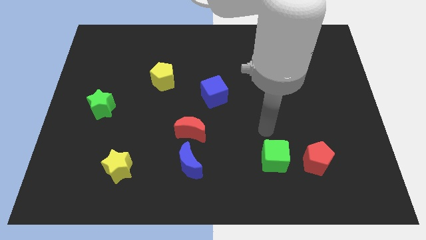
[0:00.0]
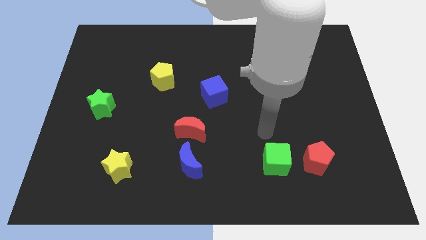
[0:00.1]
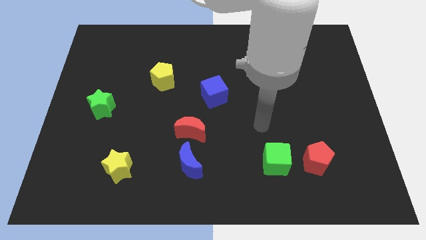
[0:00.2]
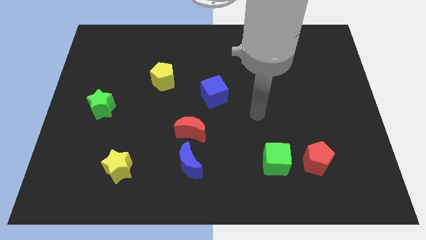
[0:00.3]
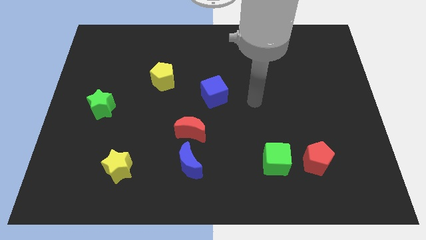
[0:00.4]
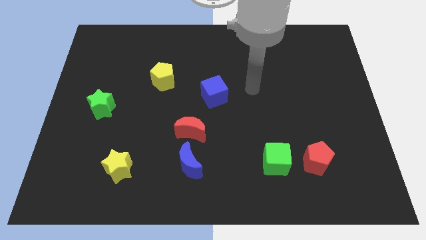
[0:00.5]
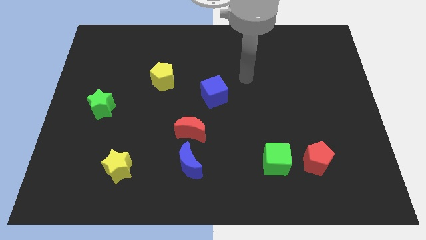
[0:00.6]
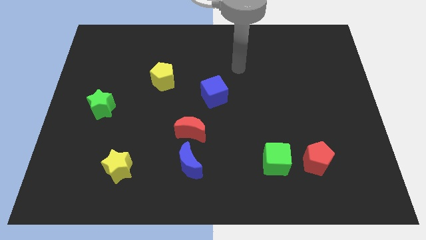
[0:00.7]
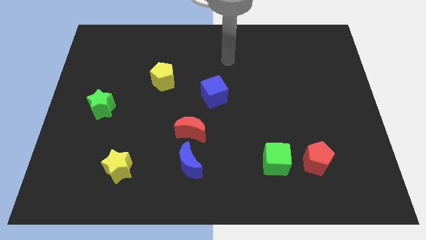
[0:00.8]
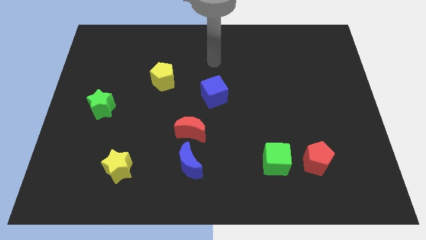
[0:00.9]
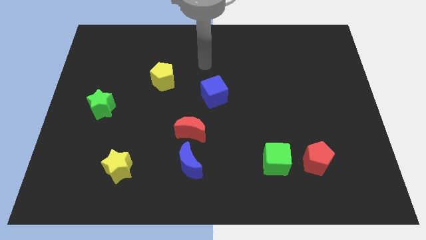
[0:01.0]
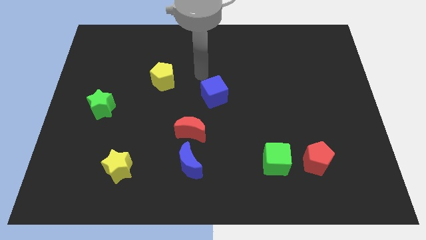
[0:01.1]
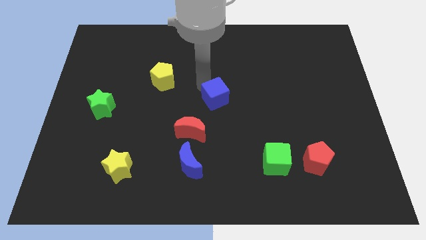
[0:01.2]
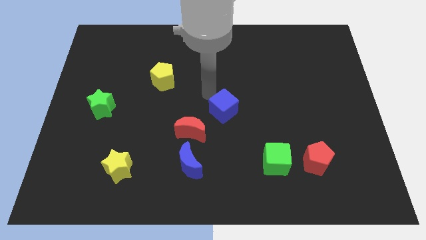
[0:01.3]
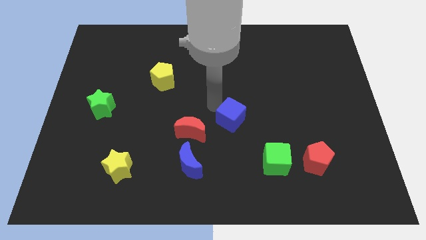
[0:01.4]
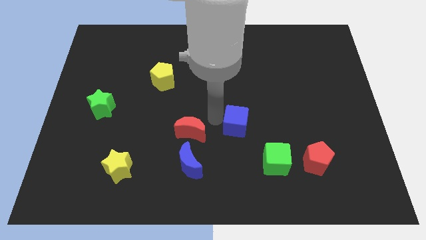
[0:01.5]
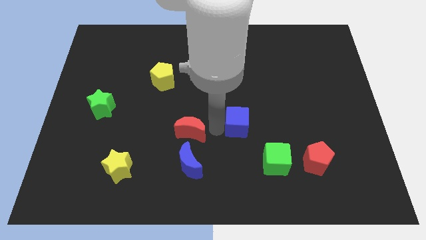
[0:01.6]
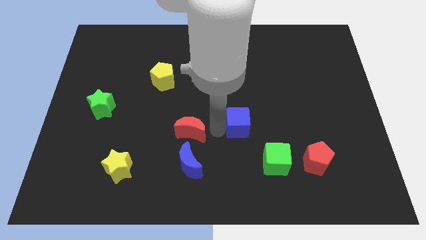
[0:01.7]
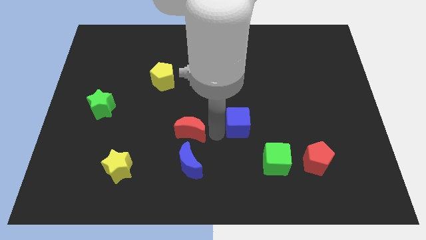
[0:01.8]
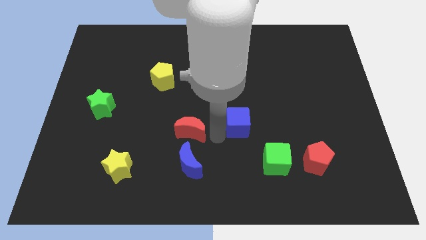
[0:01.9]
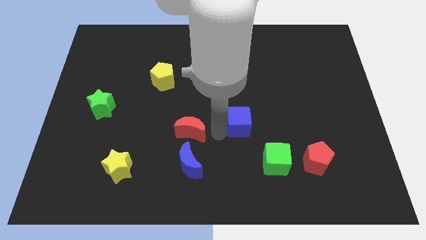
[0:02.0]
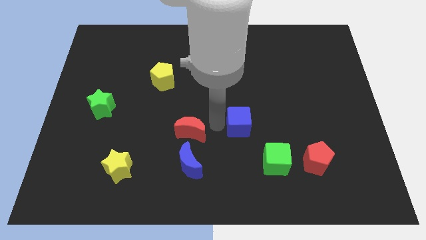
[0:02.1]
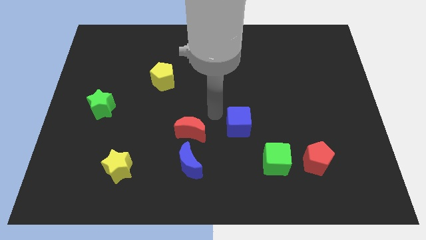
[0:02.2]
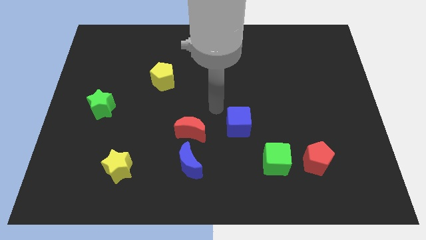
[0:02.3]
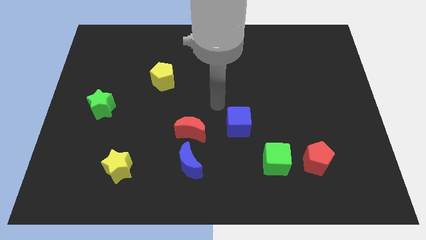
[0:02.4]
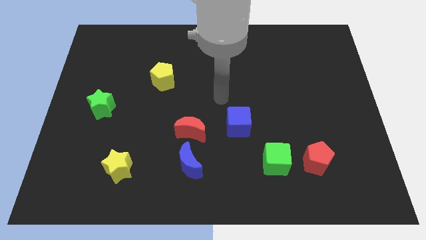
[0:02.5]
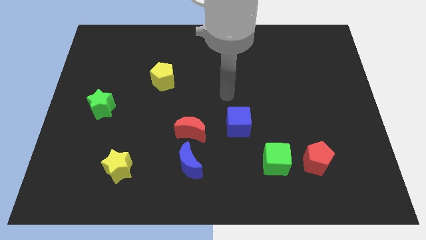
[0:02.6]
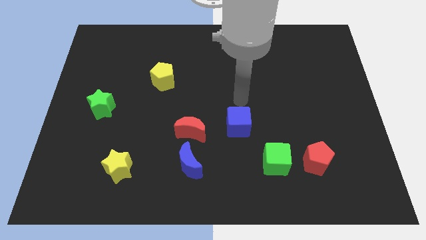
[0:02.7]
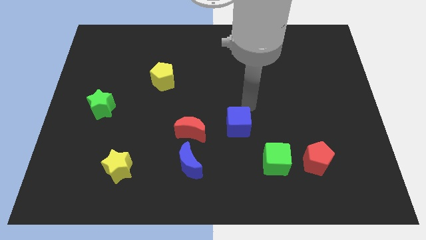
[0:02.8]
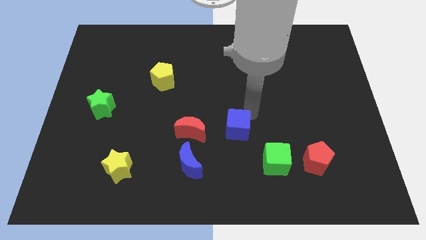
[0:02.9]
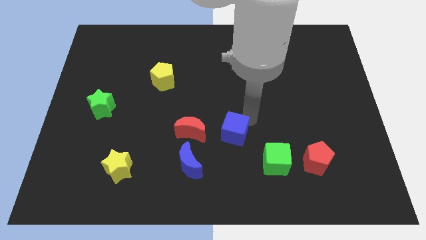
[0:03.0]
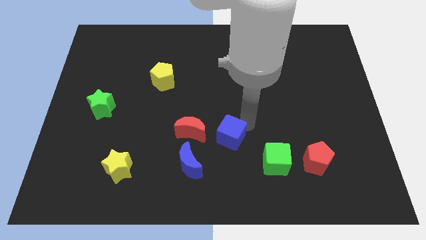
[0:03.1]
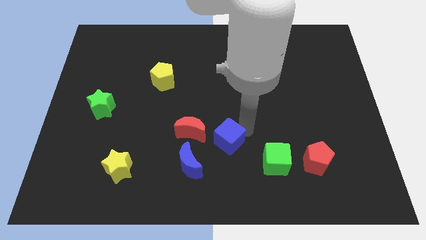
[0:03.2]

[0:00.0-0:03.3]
place blue cube adjacent to red moon

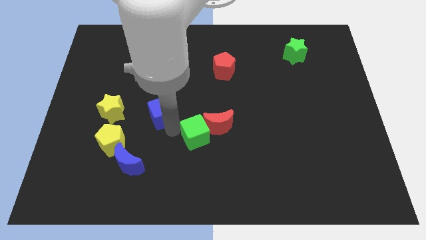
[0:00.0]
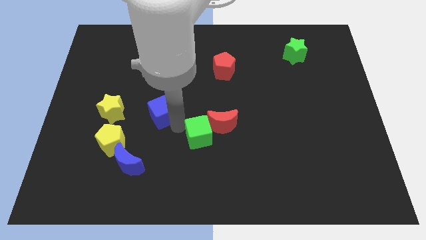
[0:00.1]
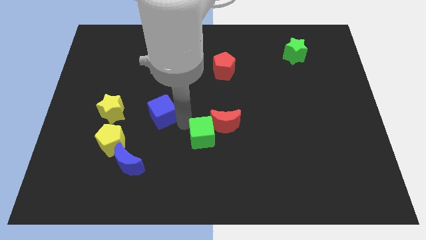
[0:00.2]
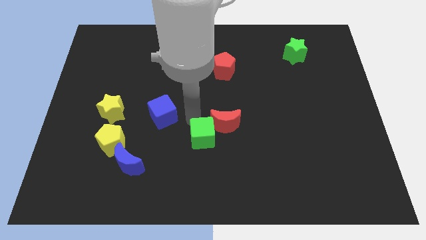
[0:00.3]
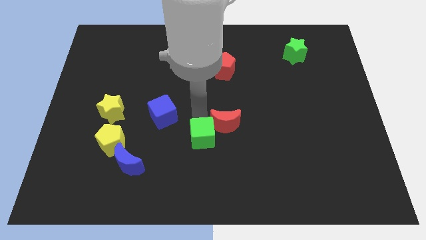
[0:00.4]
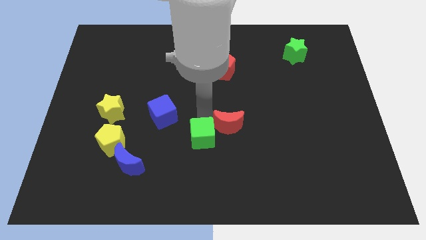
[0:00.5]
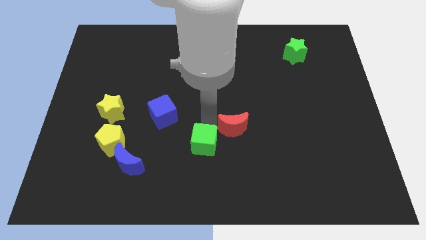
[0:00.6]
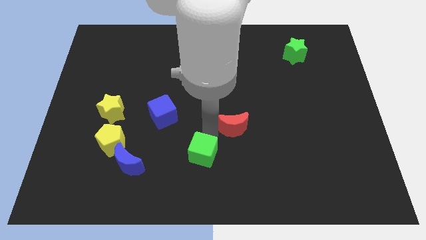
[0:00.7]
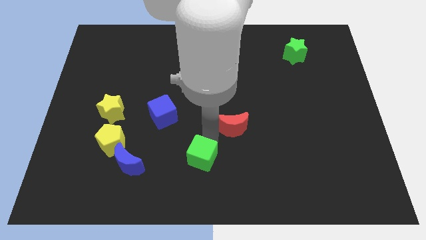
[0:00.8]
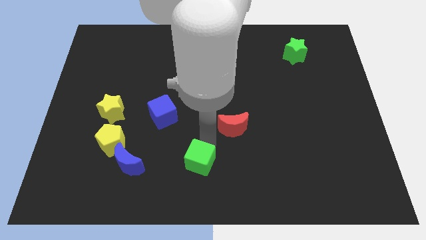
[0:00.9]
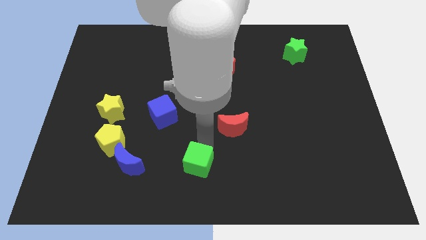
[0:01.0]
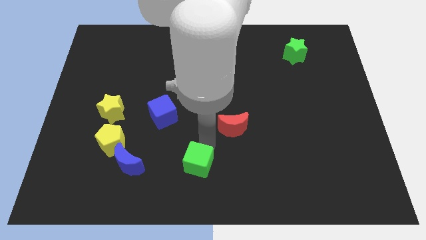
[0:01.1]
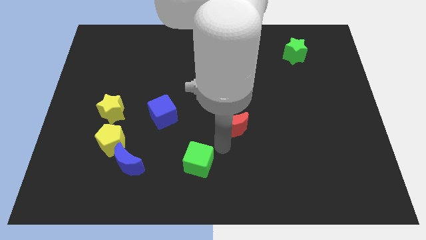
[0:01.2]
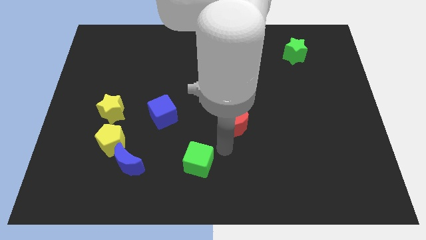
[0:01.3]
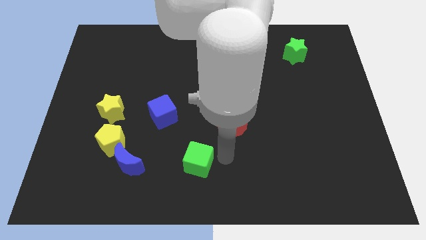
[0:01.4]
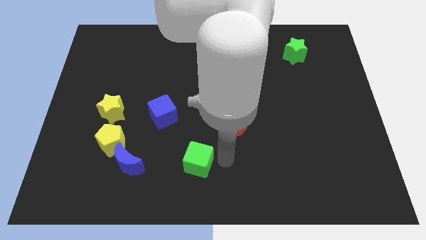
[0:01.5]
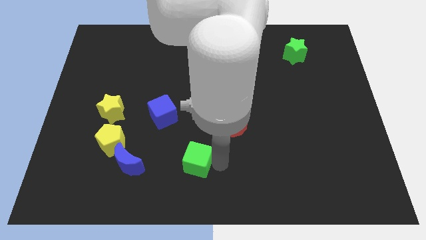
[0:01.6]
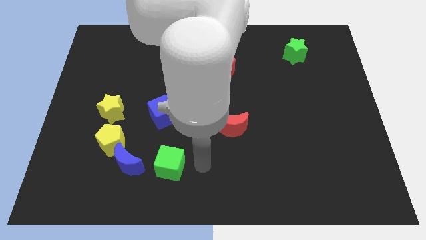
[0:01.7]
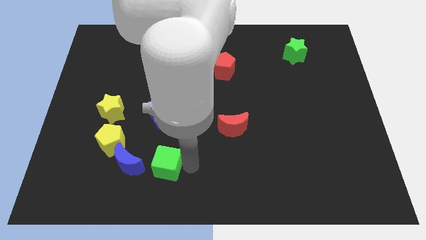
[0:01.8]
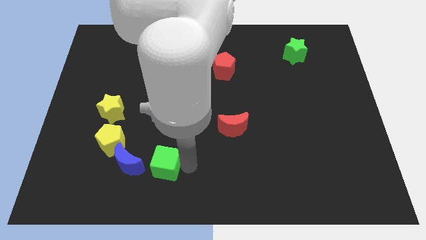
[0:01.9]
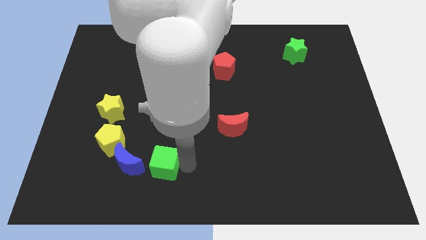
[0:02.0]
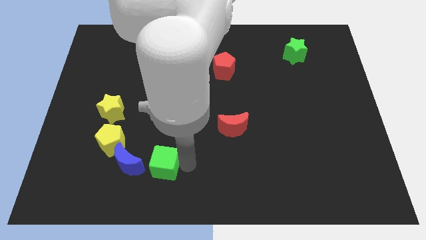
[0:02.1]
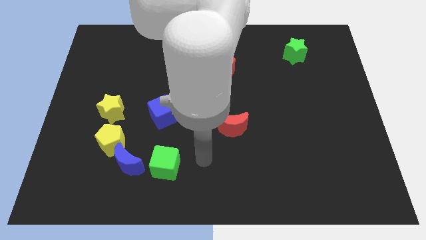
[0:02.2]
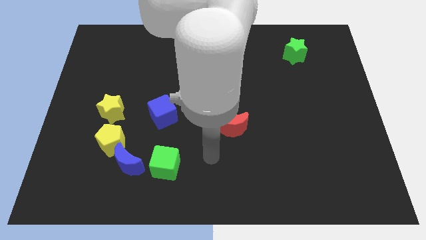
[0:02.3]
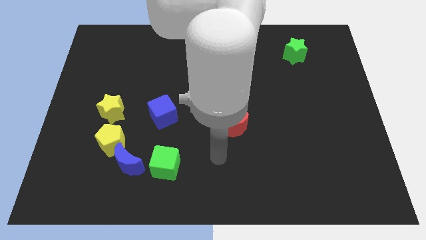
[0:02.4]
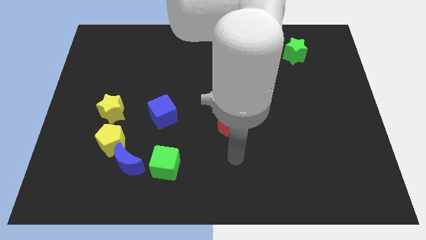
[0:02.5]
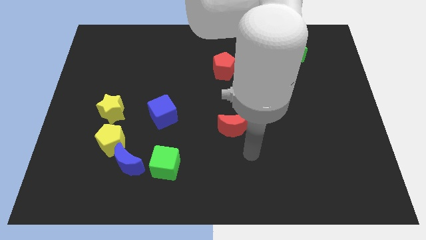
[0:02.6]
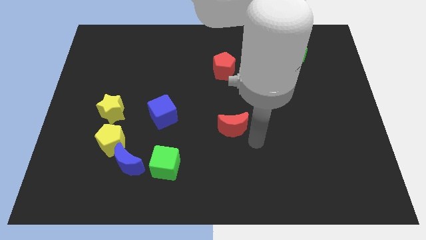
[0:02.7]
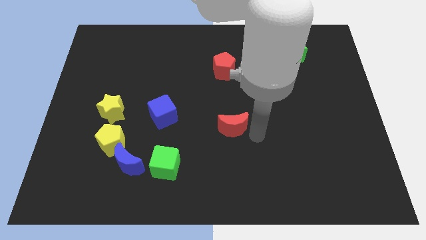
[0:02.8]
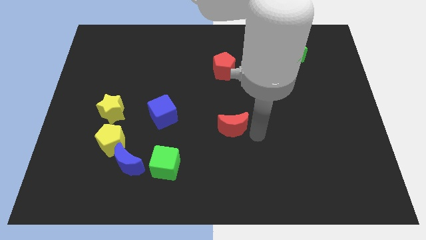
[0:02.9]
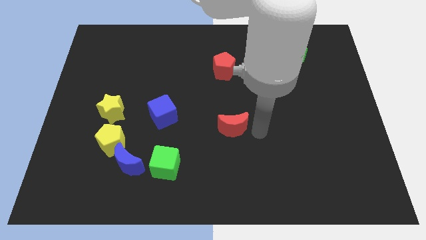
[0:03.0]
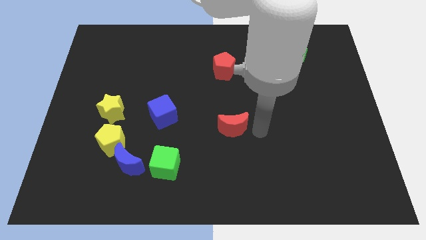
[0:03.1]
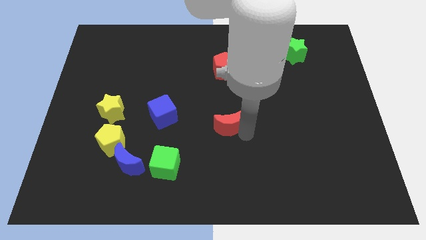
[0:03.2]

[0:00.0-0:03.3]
move the green square right to the blue moon touch red moon

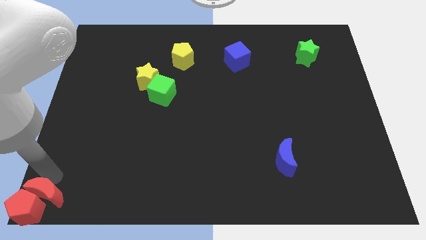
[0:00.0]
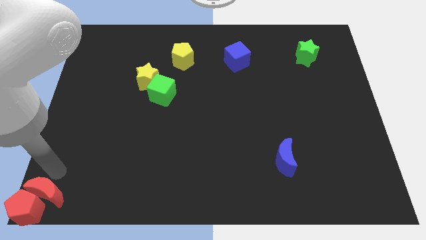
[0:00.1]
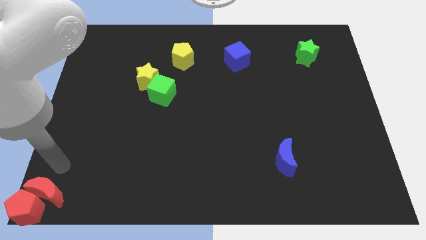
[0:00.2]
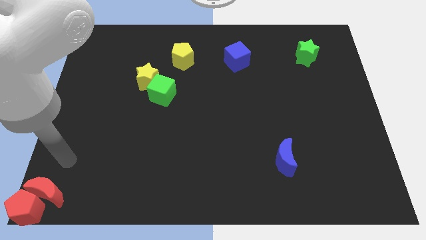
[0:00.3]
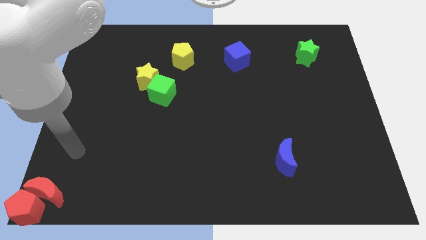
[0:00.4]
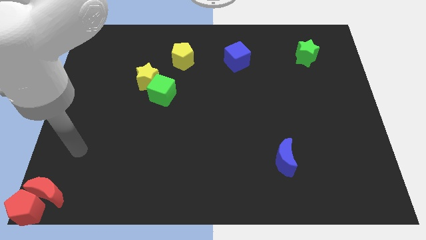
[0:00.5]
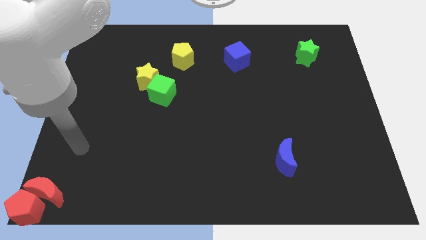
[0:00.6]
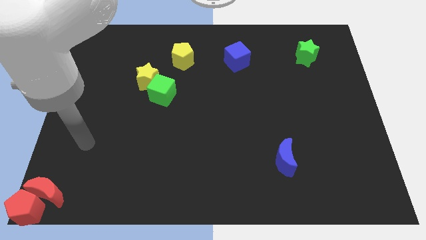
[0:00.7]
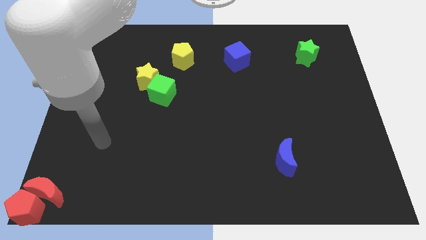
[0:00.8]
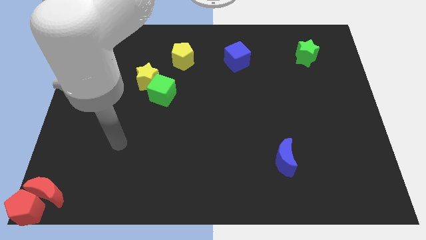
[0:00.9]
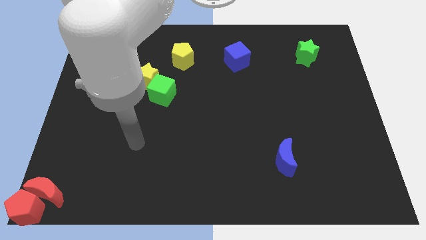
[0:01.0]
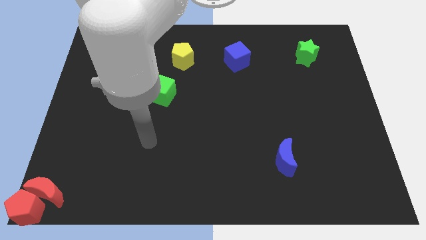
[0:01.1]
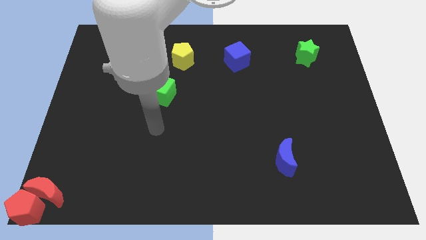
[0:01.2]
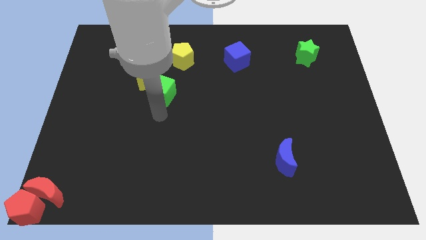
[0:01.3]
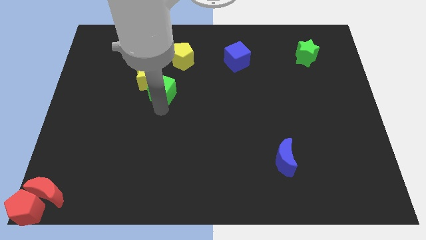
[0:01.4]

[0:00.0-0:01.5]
move your arm towards the green cube

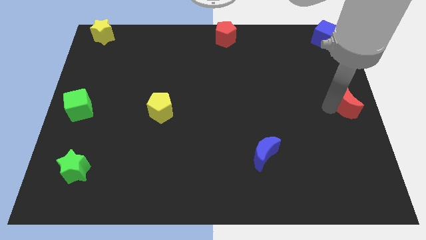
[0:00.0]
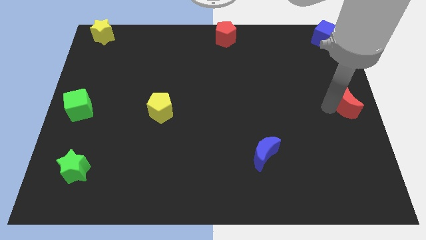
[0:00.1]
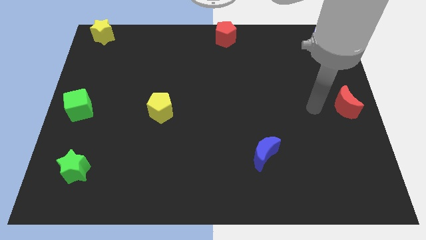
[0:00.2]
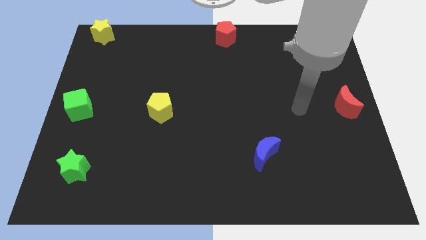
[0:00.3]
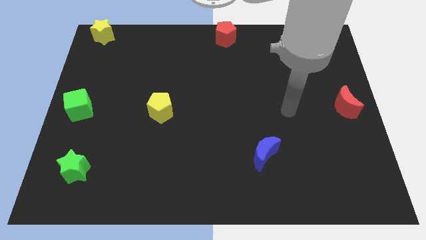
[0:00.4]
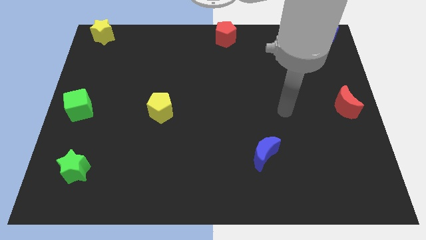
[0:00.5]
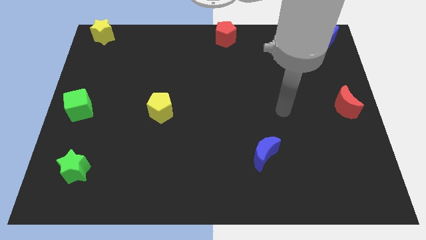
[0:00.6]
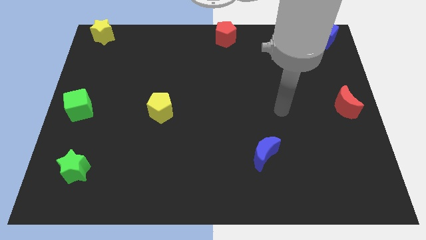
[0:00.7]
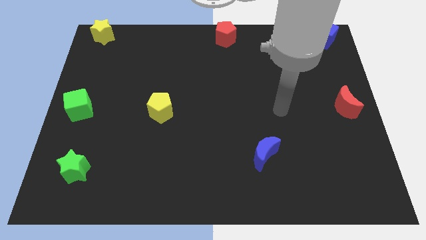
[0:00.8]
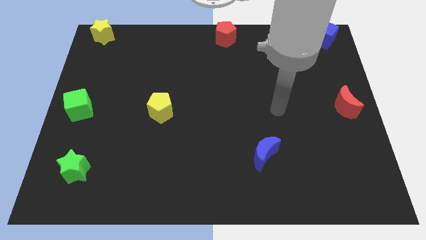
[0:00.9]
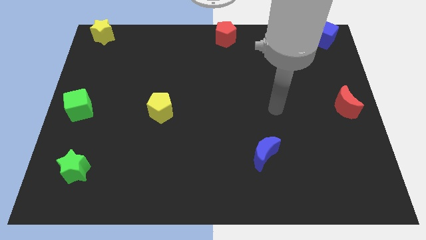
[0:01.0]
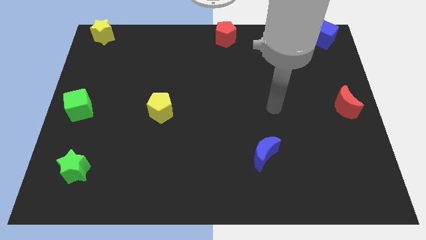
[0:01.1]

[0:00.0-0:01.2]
move the arm away from the red moon
